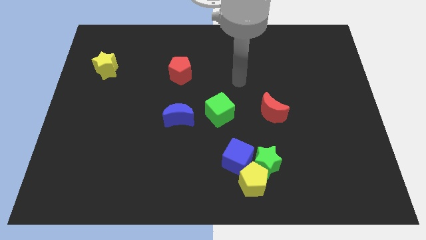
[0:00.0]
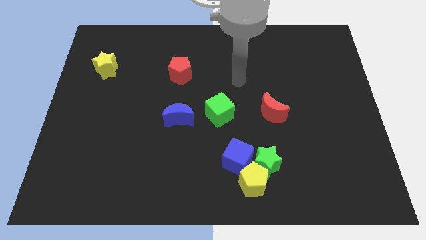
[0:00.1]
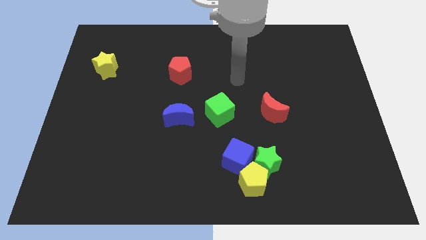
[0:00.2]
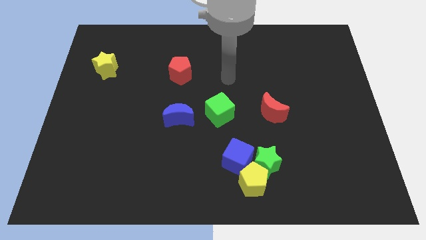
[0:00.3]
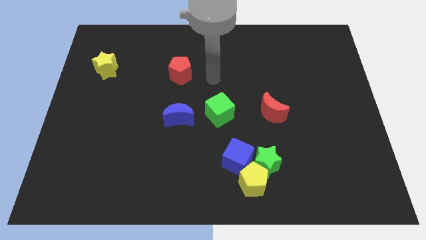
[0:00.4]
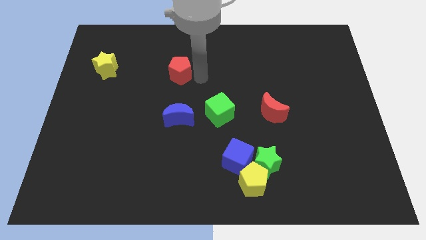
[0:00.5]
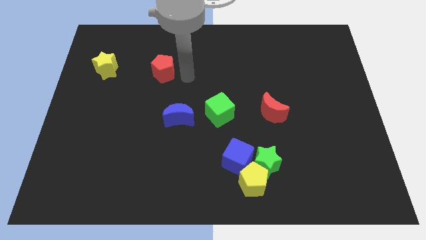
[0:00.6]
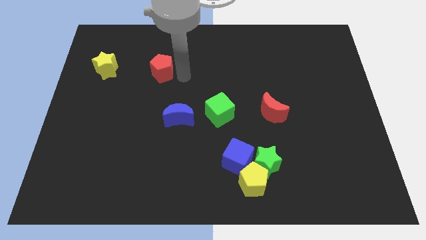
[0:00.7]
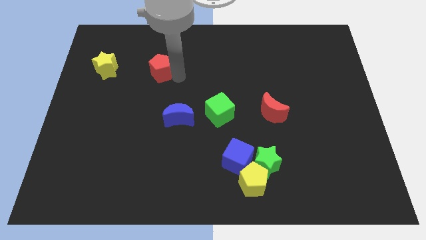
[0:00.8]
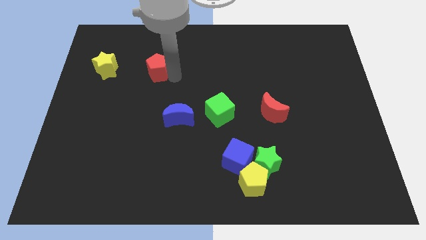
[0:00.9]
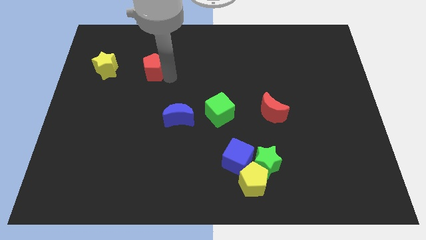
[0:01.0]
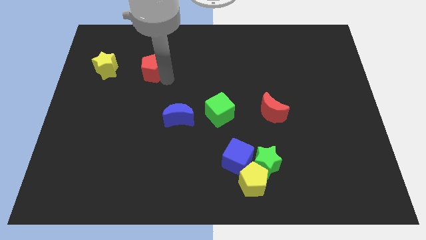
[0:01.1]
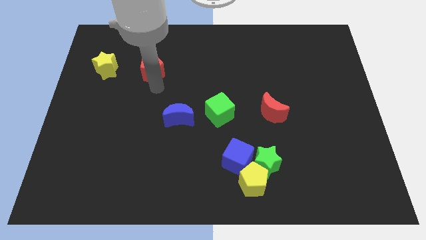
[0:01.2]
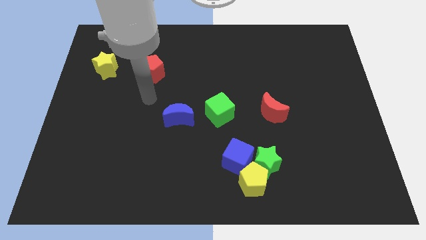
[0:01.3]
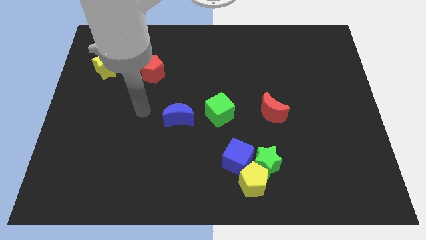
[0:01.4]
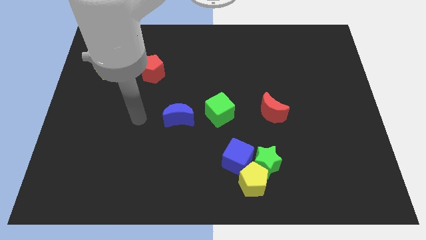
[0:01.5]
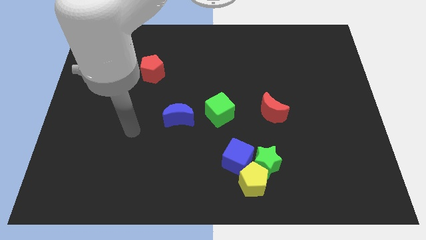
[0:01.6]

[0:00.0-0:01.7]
push the red pentagon to the left of the board

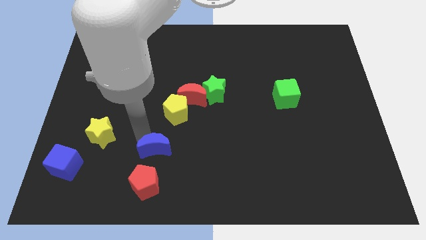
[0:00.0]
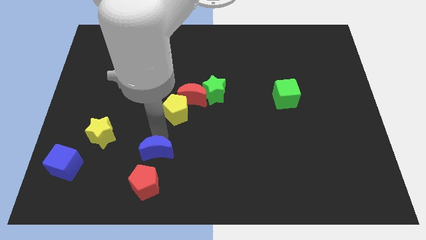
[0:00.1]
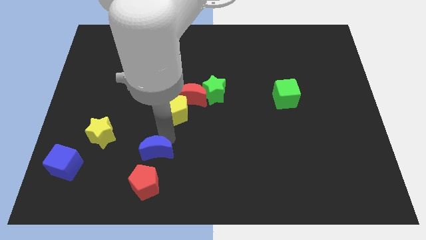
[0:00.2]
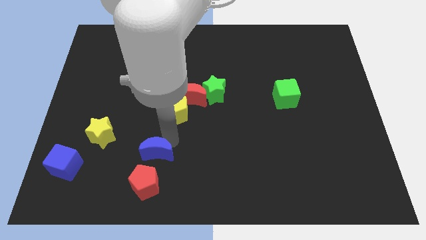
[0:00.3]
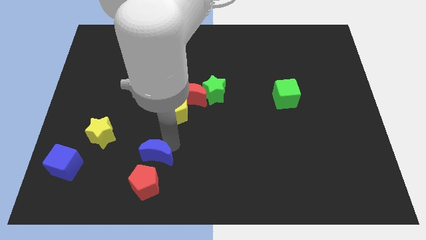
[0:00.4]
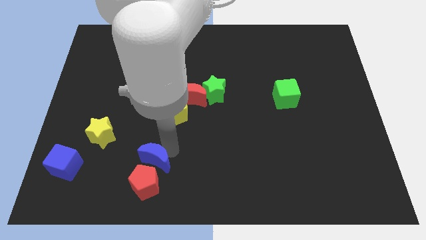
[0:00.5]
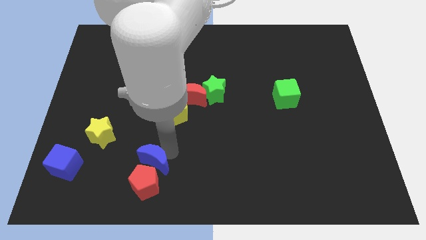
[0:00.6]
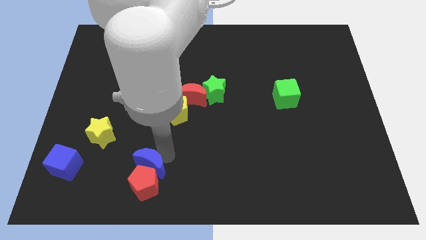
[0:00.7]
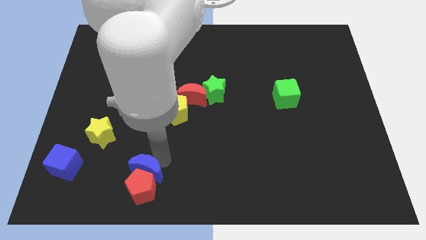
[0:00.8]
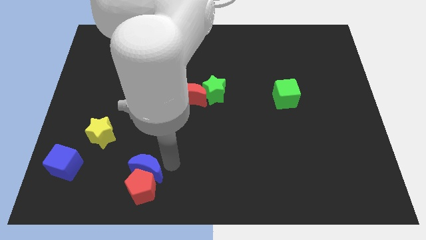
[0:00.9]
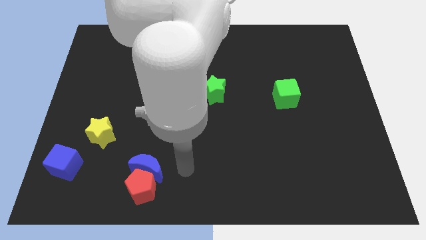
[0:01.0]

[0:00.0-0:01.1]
push the blue moon into the red pentagon

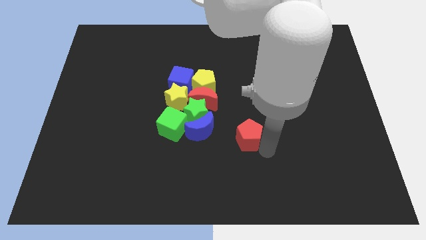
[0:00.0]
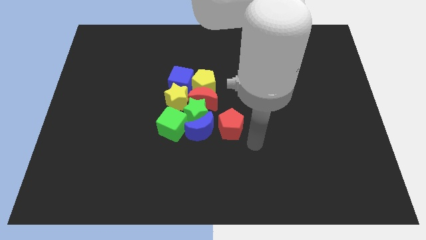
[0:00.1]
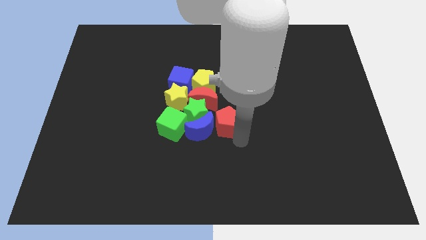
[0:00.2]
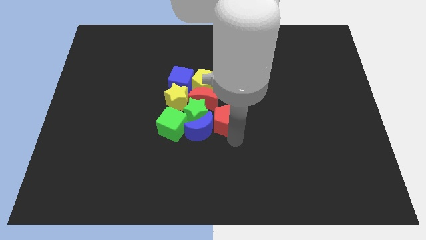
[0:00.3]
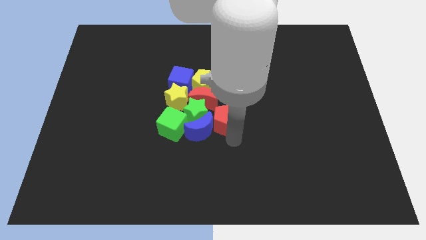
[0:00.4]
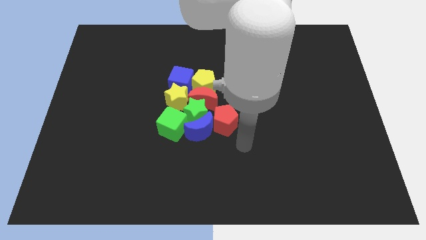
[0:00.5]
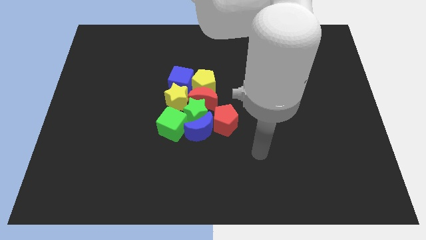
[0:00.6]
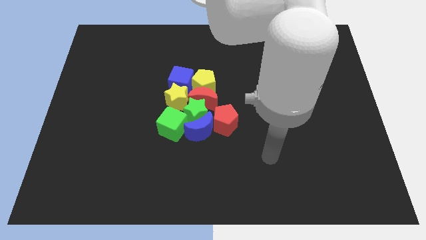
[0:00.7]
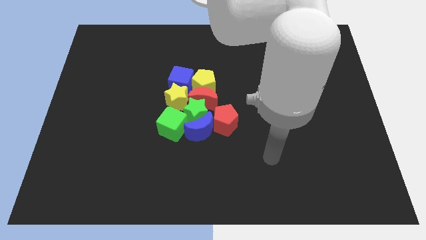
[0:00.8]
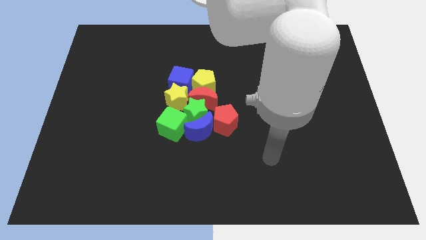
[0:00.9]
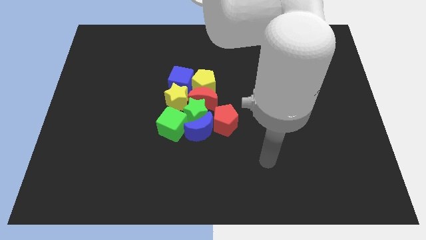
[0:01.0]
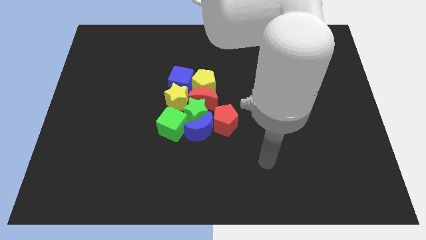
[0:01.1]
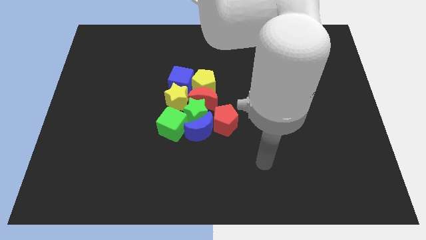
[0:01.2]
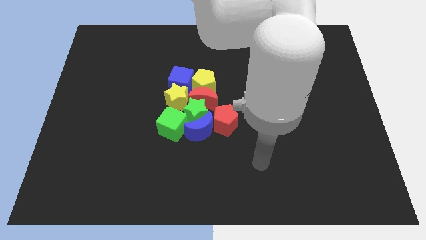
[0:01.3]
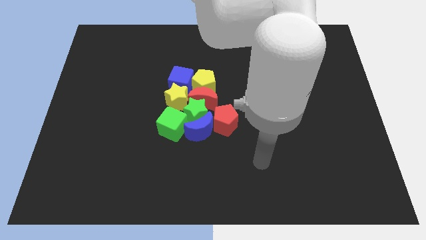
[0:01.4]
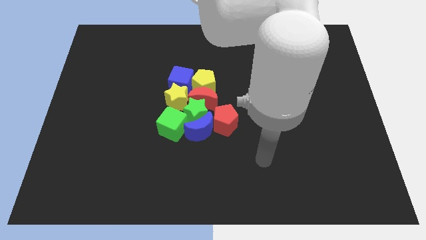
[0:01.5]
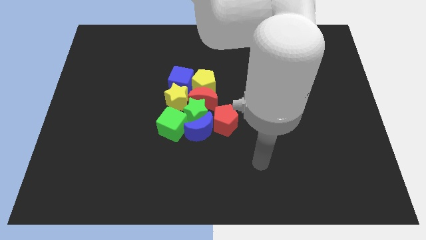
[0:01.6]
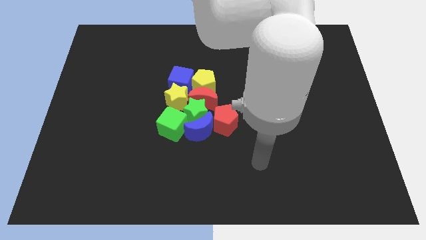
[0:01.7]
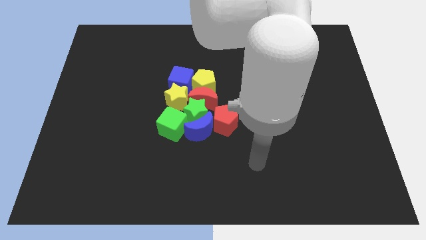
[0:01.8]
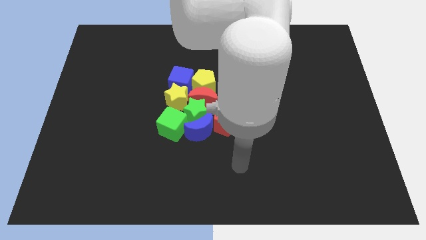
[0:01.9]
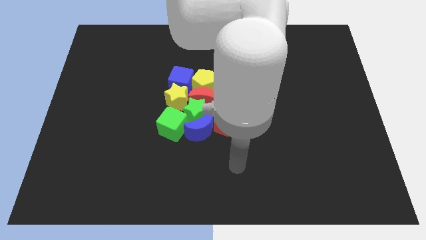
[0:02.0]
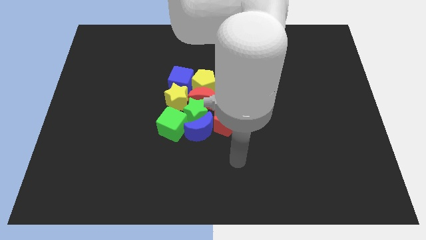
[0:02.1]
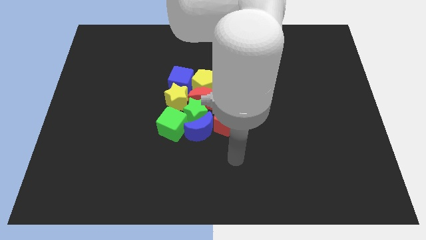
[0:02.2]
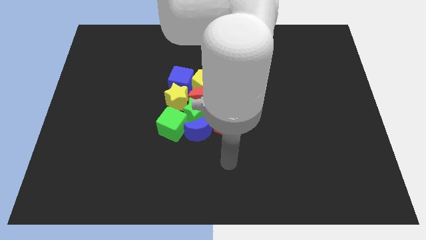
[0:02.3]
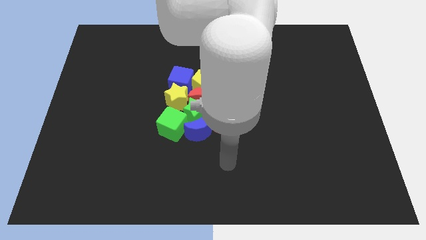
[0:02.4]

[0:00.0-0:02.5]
drag the red pentagon close to the group of blocks

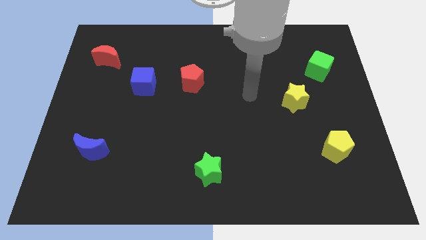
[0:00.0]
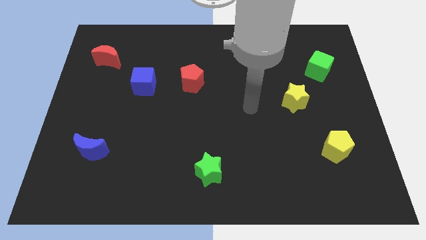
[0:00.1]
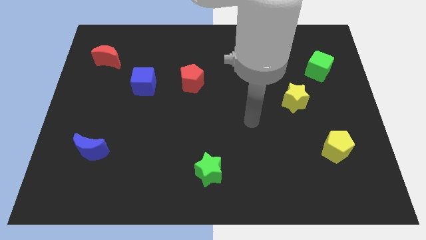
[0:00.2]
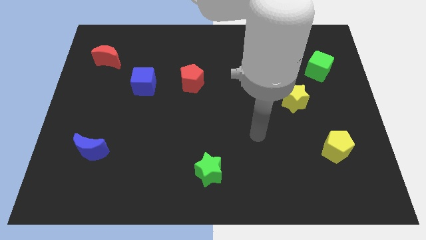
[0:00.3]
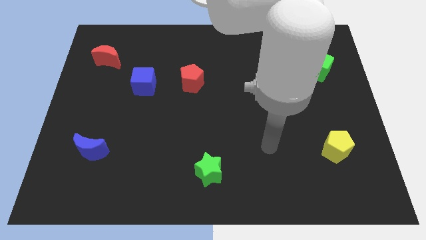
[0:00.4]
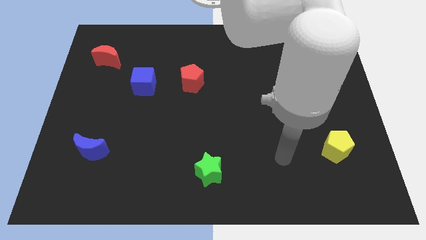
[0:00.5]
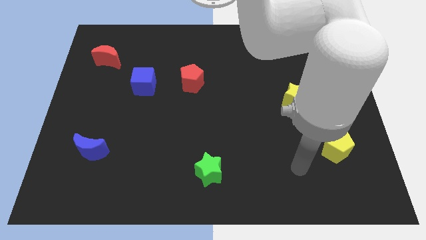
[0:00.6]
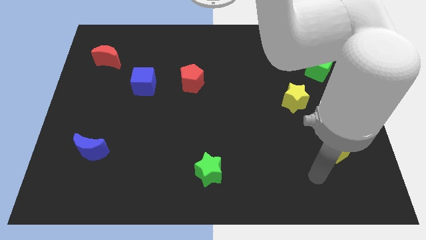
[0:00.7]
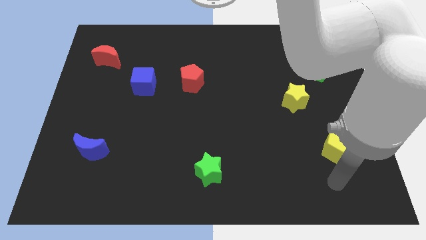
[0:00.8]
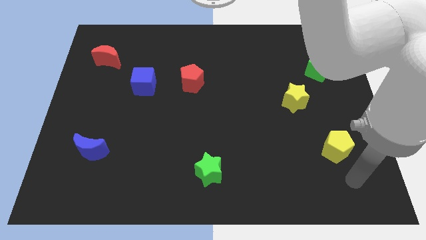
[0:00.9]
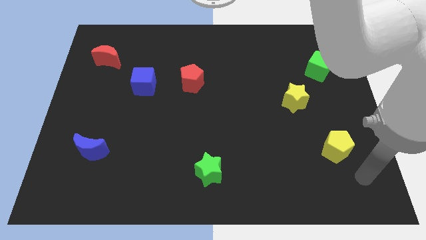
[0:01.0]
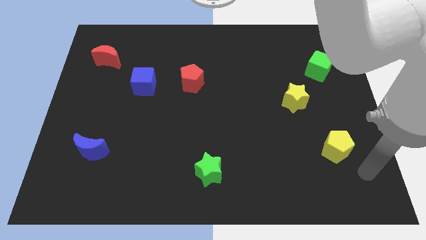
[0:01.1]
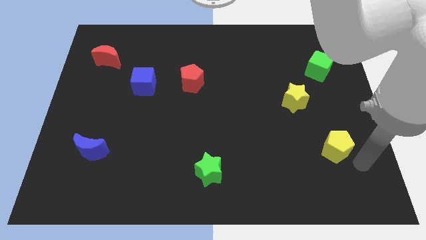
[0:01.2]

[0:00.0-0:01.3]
touch the bottom of yellow pentagon

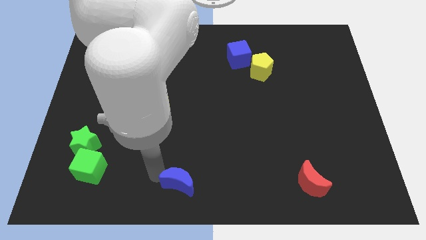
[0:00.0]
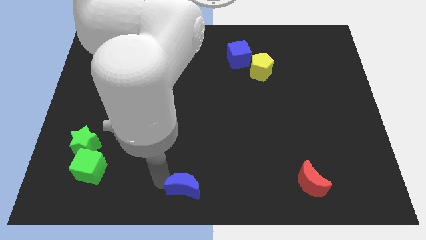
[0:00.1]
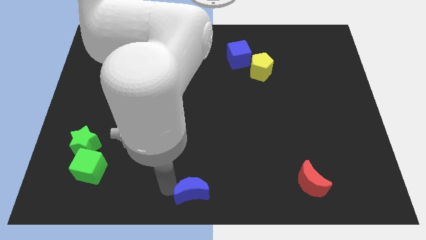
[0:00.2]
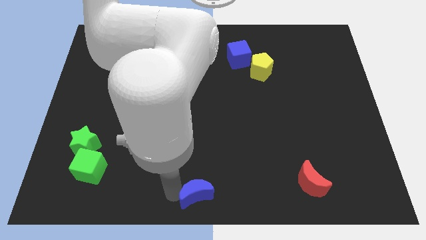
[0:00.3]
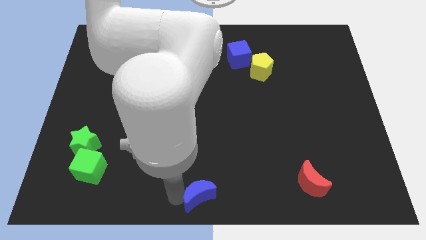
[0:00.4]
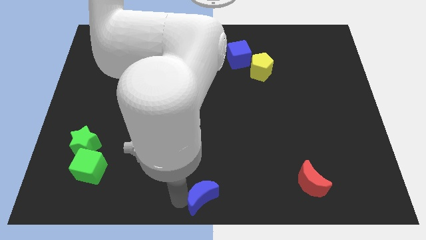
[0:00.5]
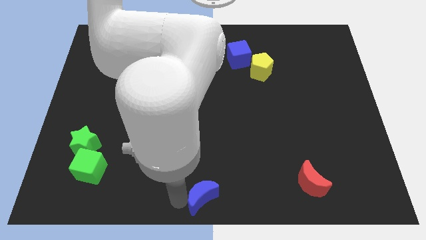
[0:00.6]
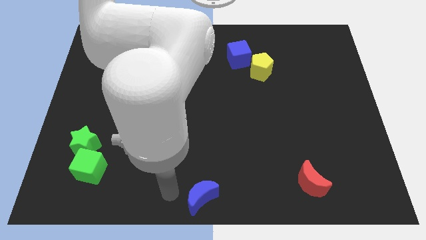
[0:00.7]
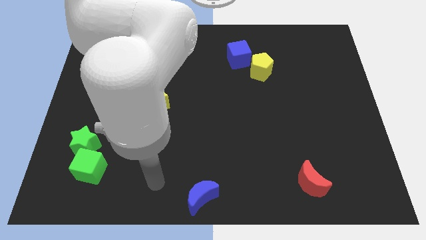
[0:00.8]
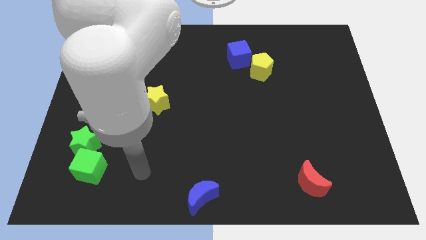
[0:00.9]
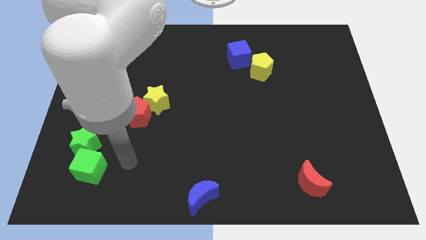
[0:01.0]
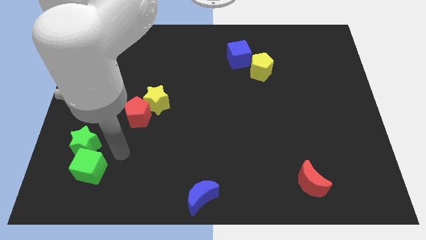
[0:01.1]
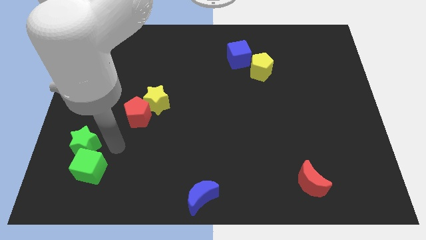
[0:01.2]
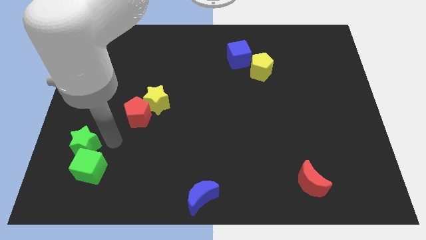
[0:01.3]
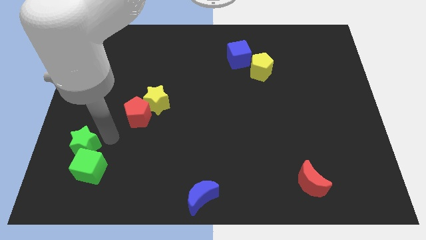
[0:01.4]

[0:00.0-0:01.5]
place blue crescent at bottom center of the board

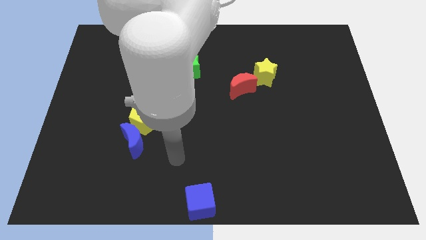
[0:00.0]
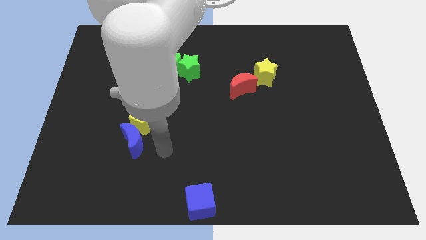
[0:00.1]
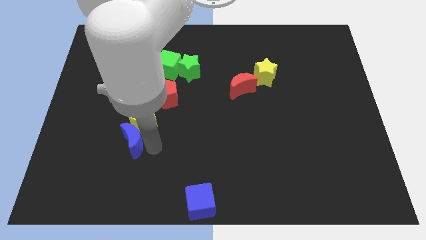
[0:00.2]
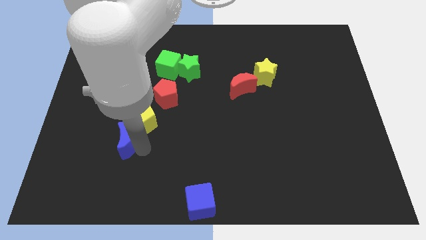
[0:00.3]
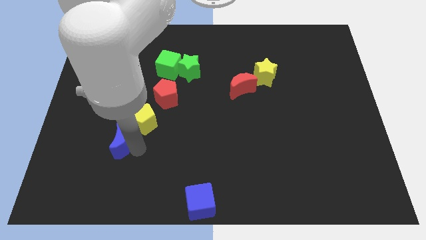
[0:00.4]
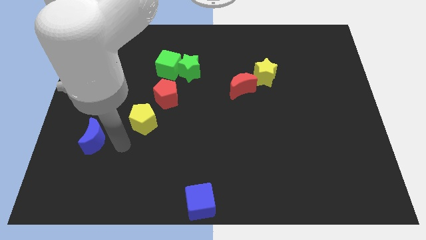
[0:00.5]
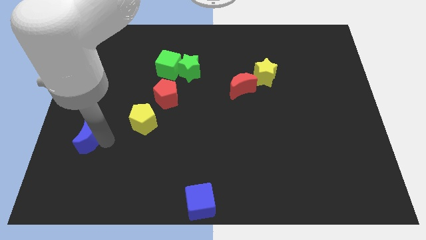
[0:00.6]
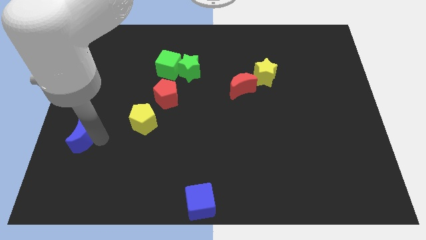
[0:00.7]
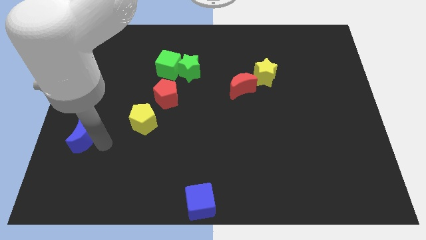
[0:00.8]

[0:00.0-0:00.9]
place the blue moon diagonally top left to the blue cube
